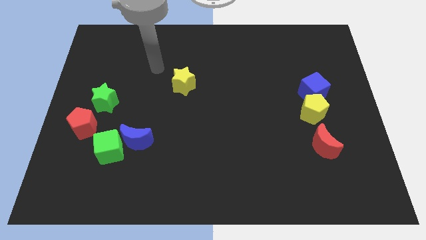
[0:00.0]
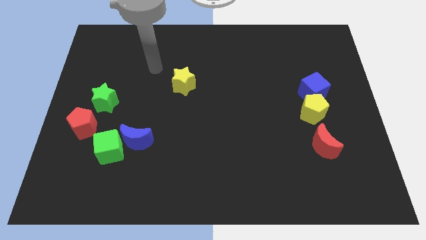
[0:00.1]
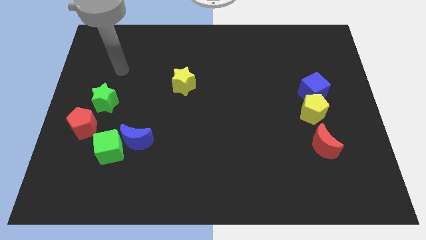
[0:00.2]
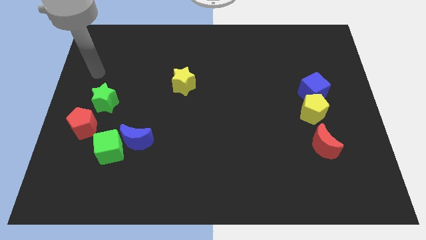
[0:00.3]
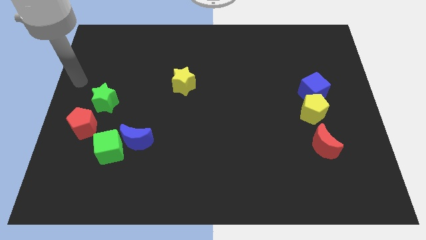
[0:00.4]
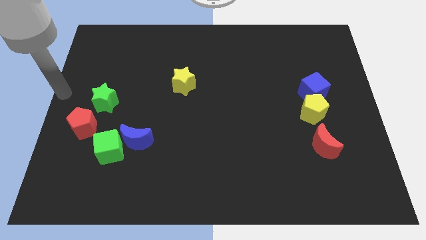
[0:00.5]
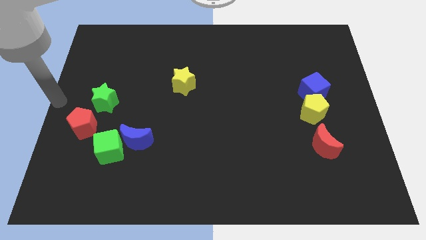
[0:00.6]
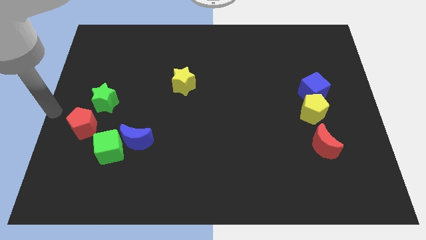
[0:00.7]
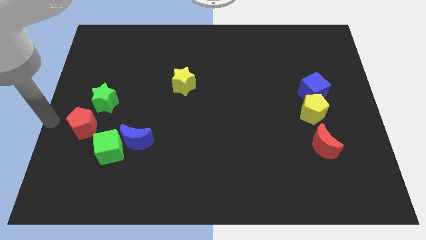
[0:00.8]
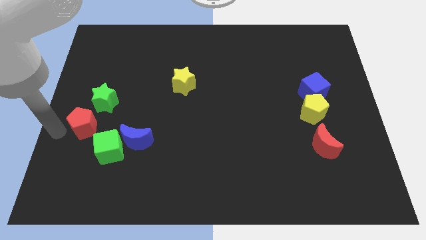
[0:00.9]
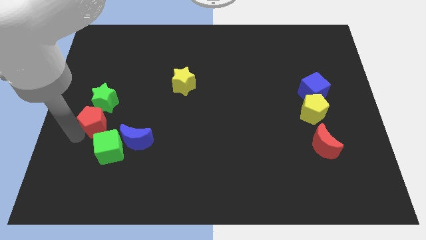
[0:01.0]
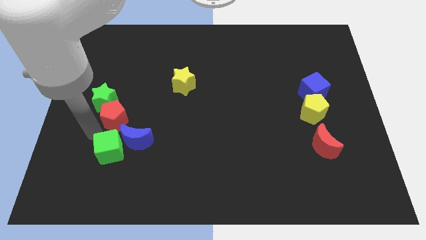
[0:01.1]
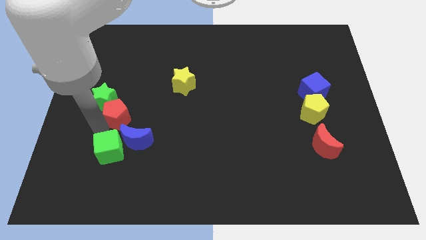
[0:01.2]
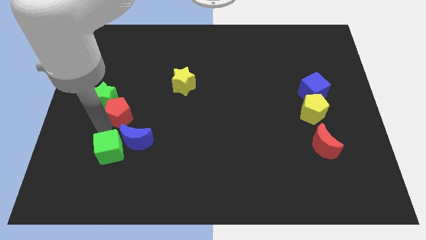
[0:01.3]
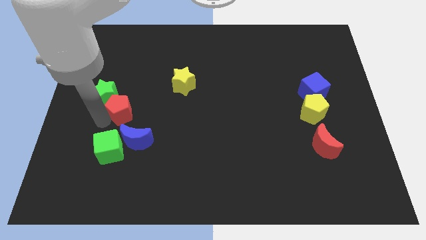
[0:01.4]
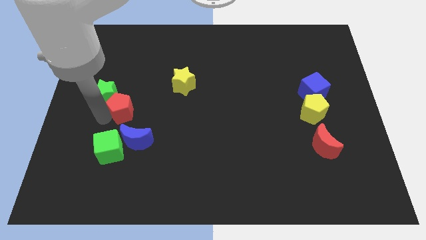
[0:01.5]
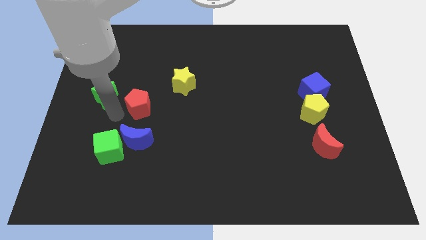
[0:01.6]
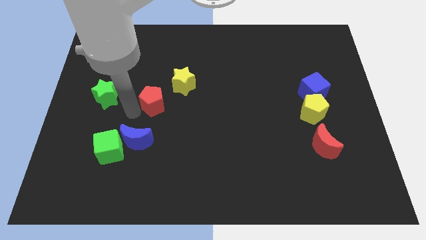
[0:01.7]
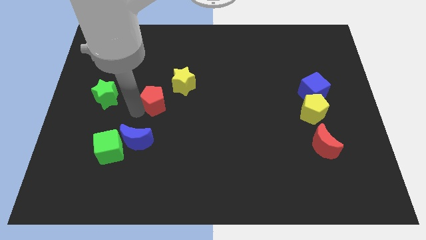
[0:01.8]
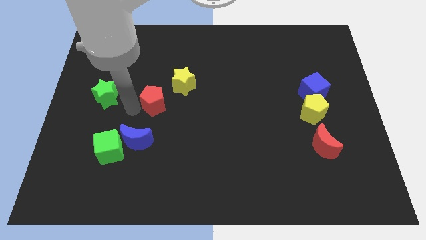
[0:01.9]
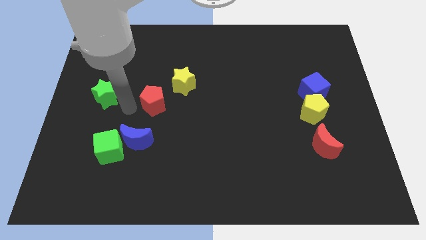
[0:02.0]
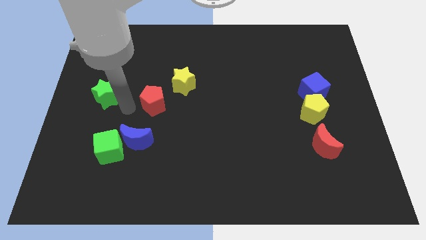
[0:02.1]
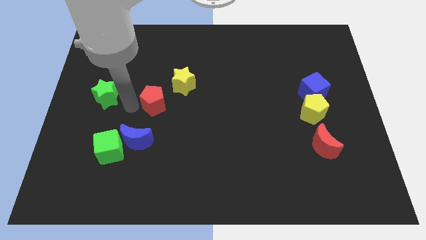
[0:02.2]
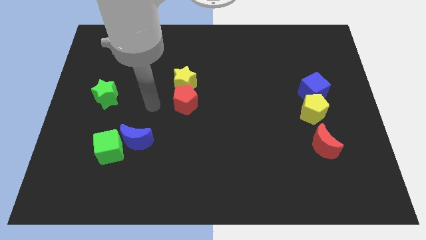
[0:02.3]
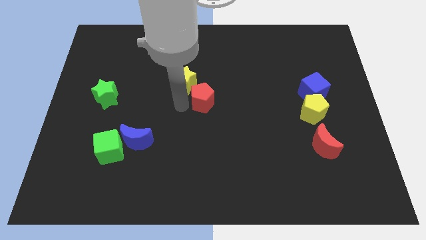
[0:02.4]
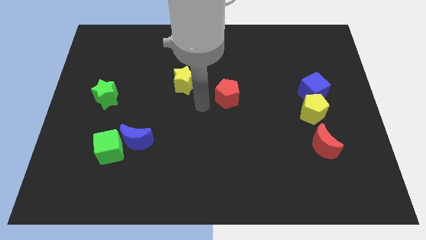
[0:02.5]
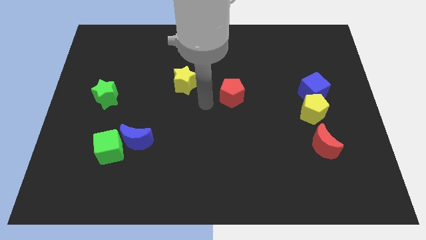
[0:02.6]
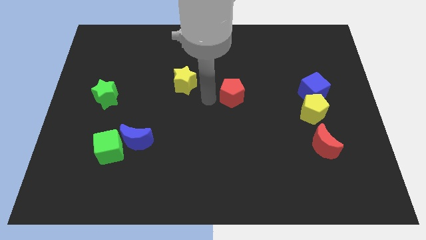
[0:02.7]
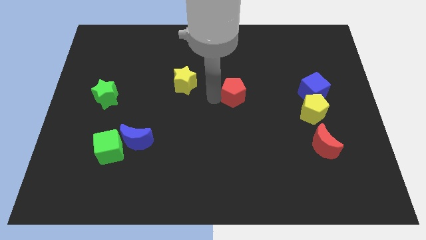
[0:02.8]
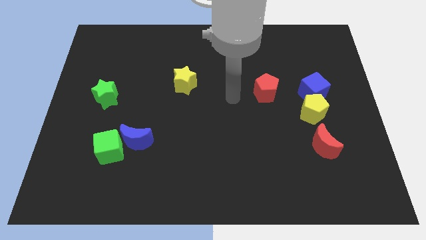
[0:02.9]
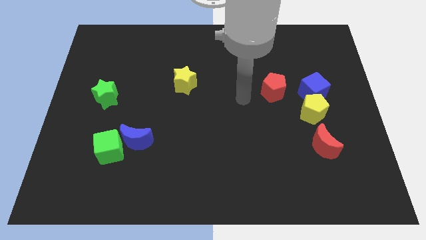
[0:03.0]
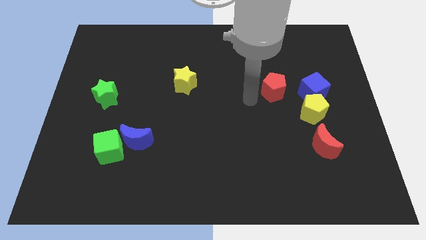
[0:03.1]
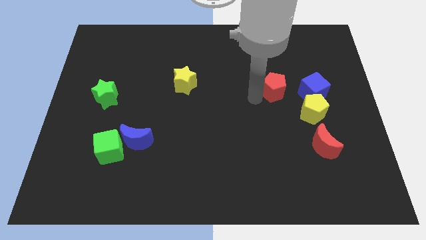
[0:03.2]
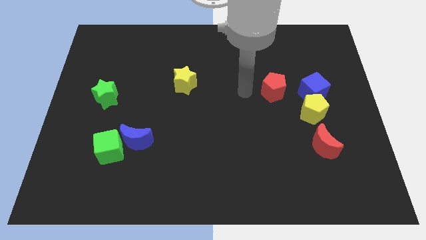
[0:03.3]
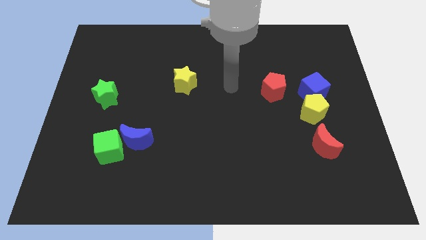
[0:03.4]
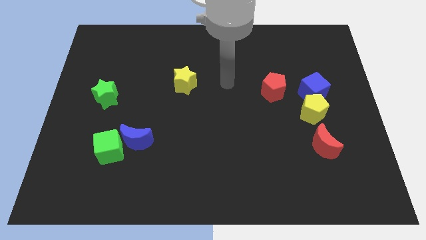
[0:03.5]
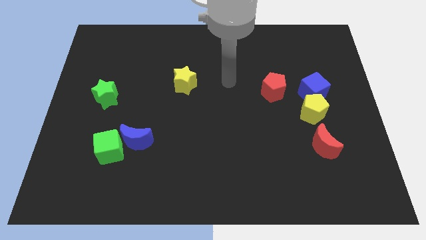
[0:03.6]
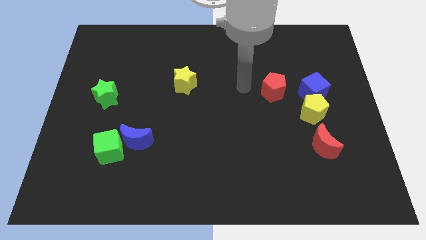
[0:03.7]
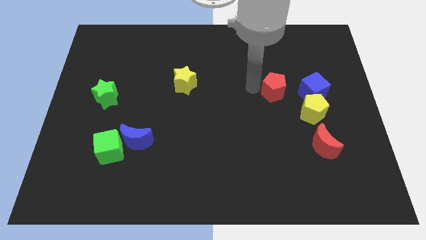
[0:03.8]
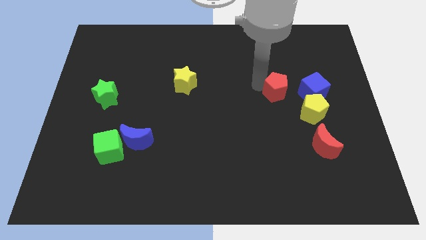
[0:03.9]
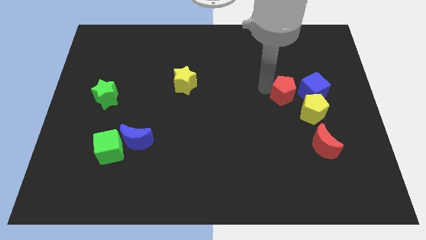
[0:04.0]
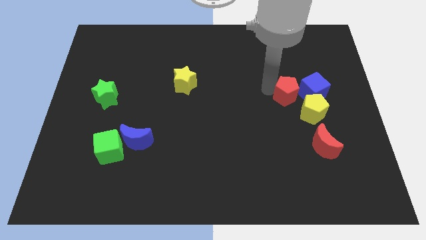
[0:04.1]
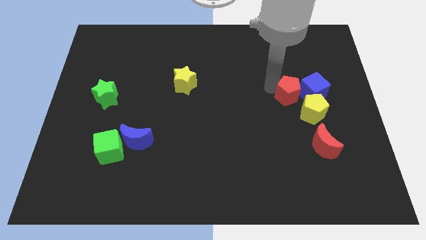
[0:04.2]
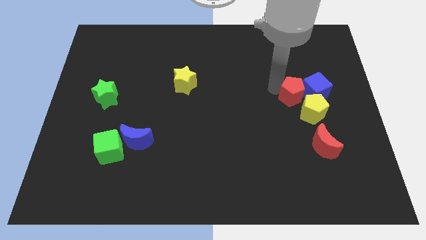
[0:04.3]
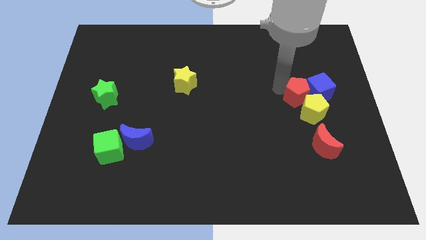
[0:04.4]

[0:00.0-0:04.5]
slide the red pentagon to the yellow pentagon

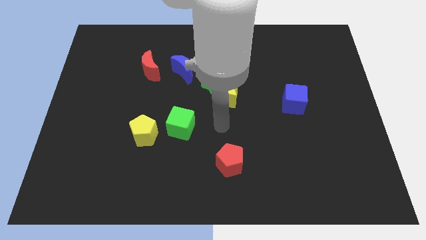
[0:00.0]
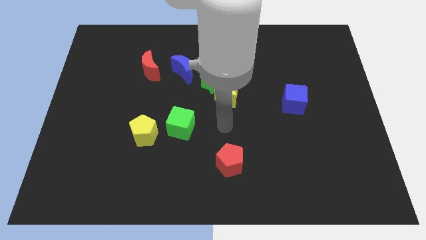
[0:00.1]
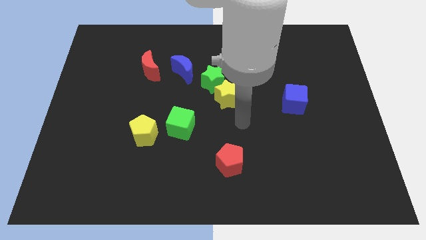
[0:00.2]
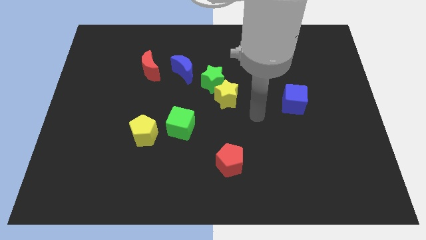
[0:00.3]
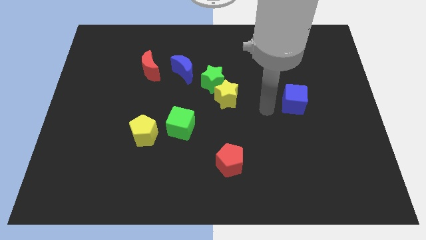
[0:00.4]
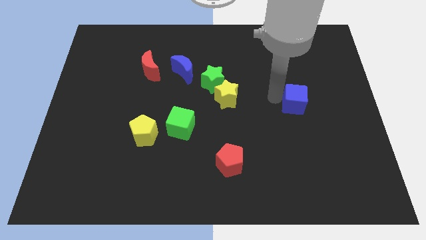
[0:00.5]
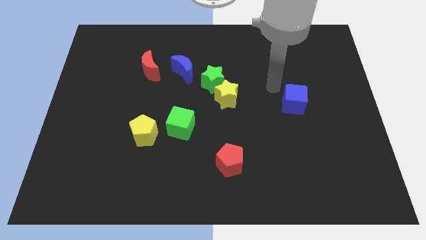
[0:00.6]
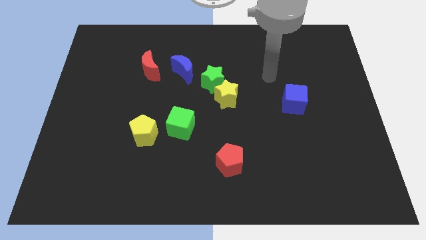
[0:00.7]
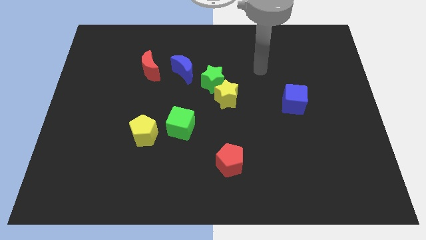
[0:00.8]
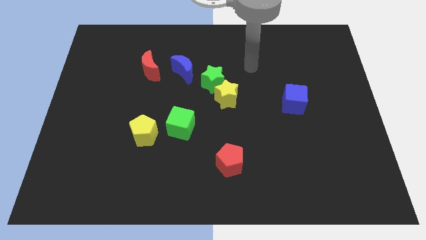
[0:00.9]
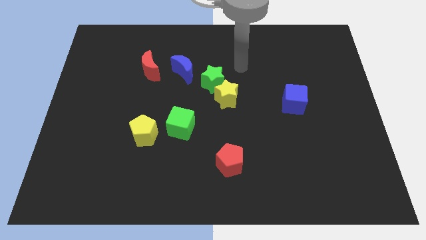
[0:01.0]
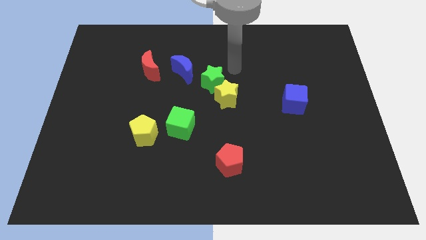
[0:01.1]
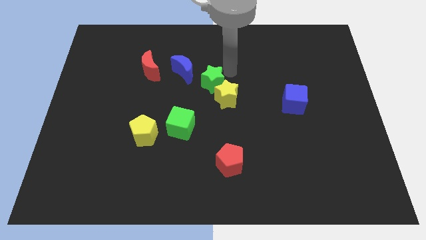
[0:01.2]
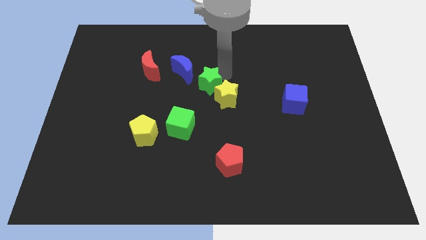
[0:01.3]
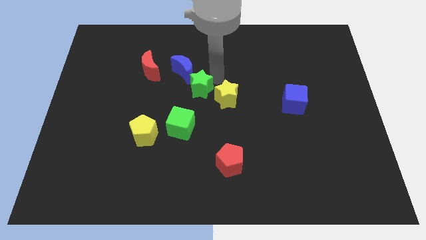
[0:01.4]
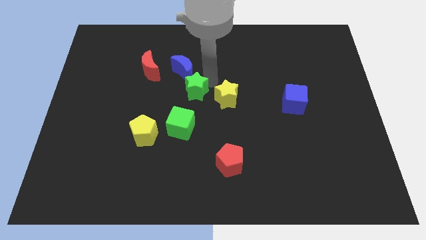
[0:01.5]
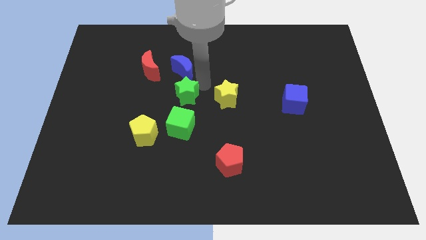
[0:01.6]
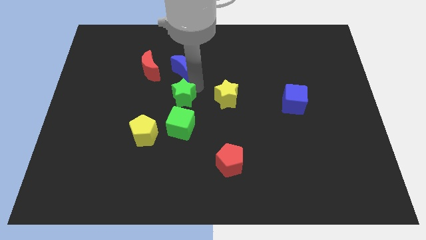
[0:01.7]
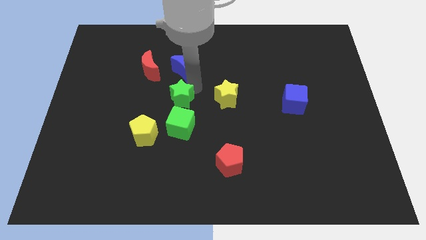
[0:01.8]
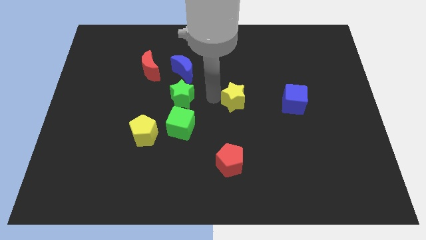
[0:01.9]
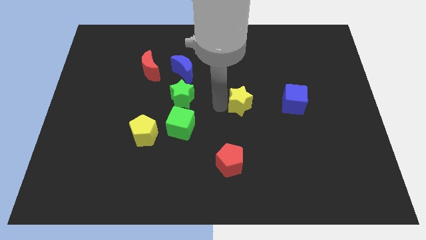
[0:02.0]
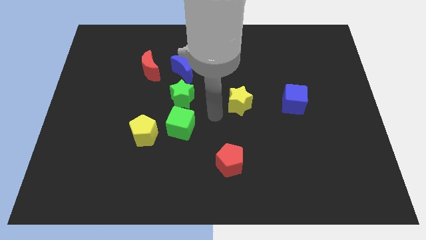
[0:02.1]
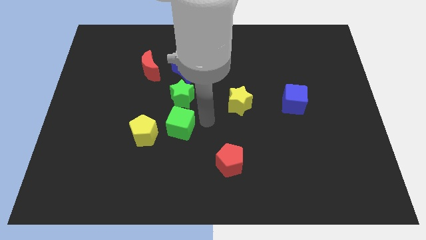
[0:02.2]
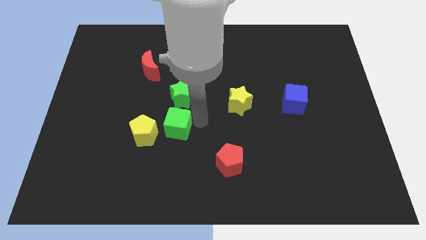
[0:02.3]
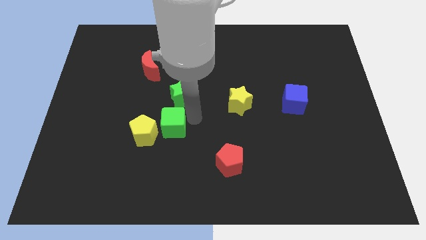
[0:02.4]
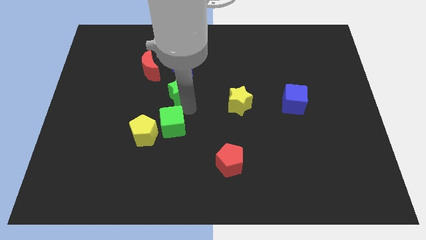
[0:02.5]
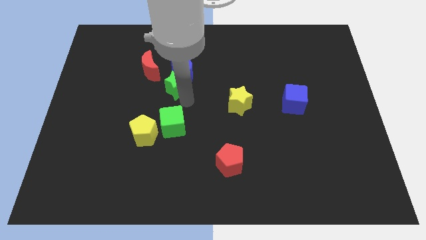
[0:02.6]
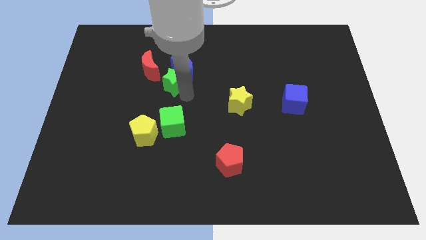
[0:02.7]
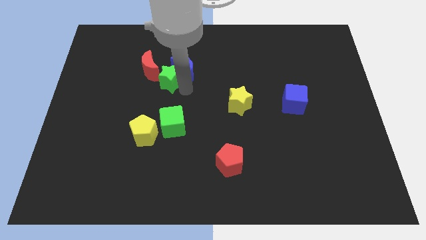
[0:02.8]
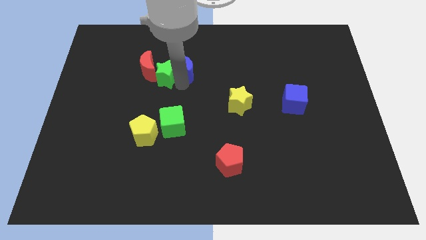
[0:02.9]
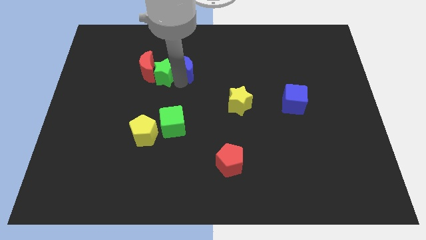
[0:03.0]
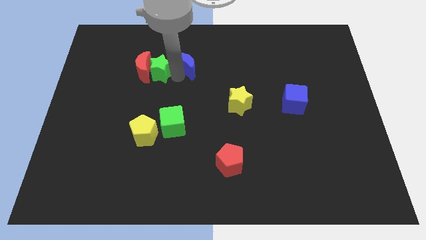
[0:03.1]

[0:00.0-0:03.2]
move the green star towards the red moon

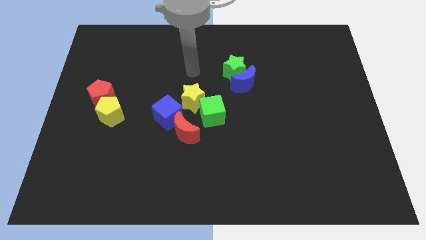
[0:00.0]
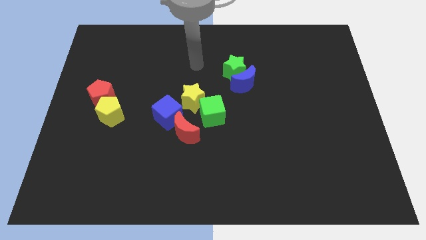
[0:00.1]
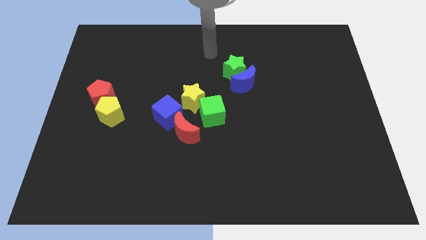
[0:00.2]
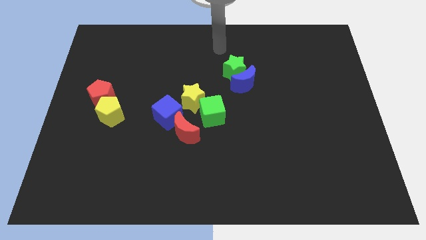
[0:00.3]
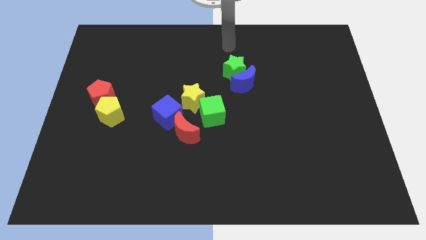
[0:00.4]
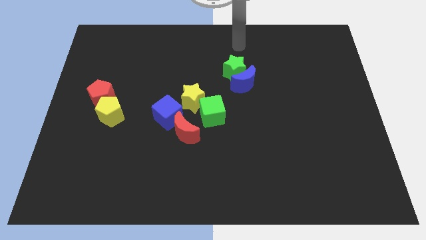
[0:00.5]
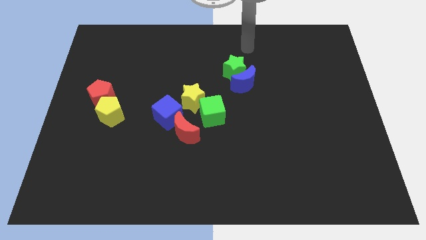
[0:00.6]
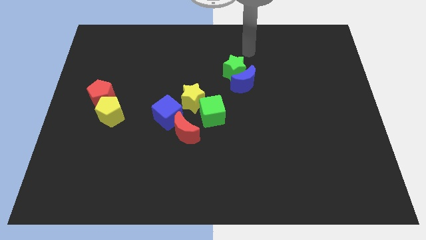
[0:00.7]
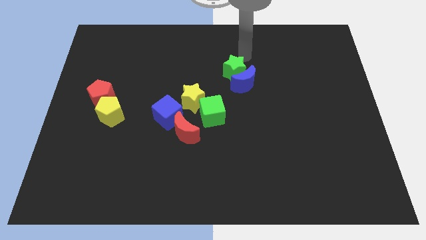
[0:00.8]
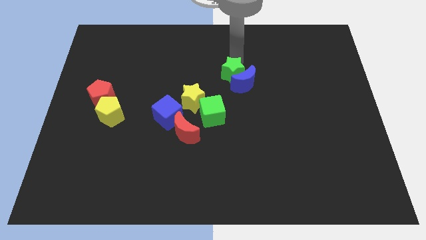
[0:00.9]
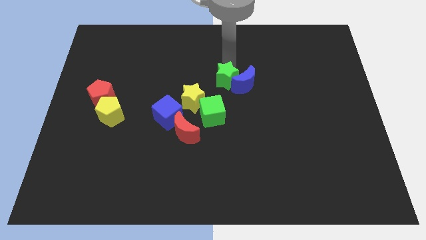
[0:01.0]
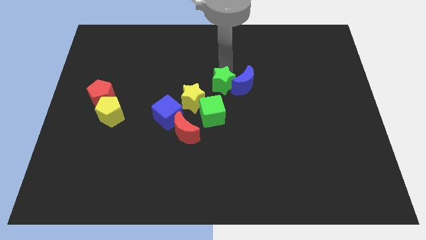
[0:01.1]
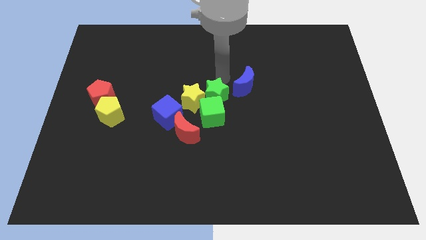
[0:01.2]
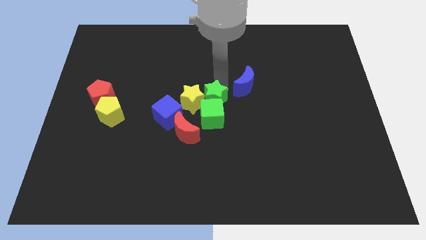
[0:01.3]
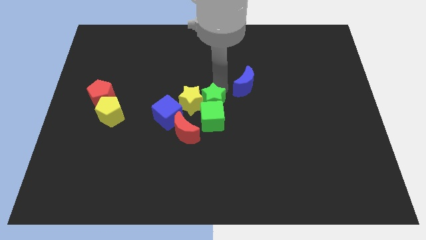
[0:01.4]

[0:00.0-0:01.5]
slide the green star close to the green cube
